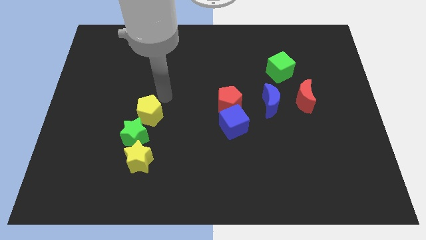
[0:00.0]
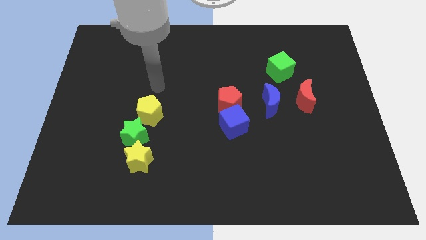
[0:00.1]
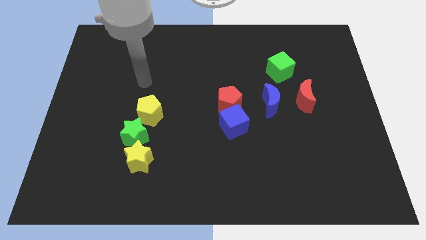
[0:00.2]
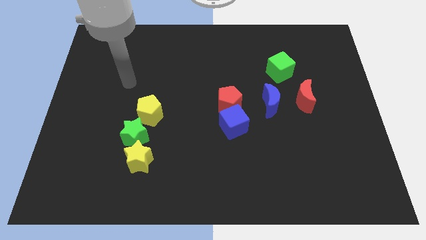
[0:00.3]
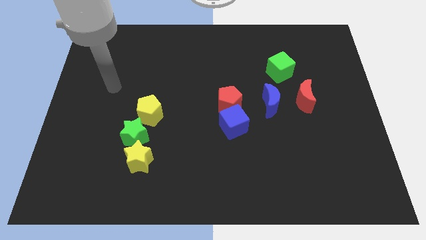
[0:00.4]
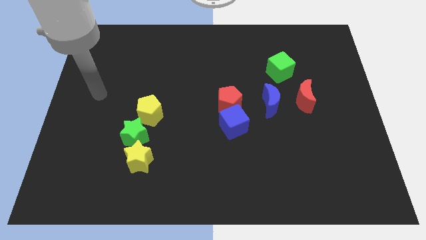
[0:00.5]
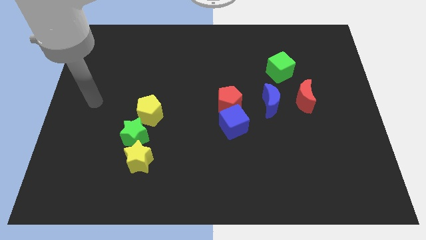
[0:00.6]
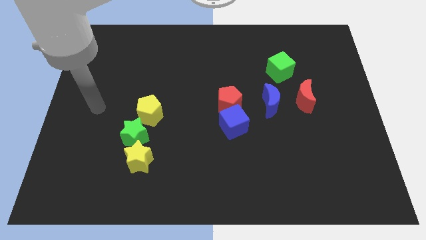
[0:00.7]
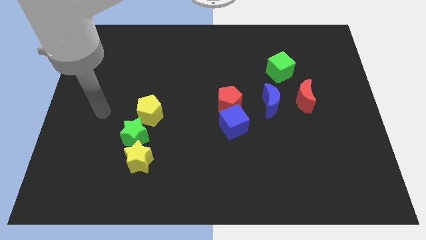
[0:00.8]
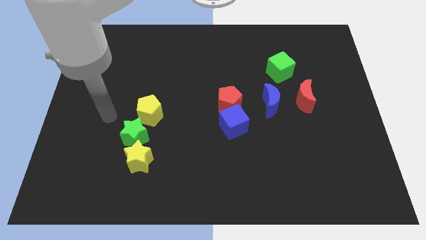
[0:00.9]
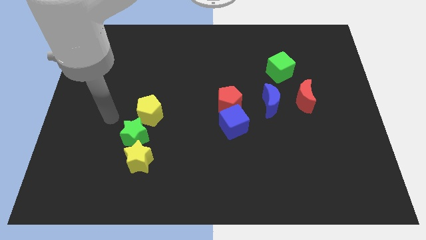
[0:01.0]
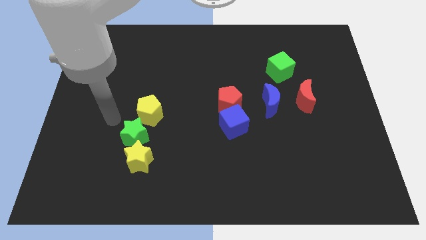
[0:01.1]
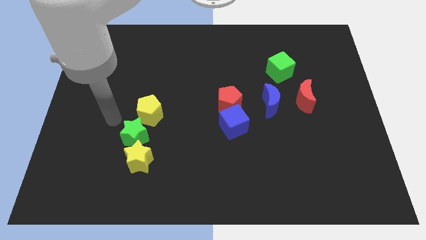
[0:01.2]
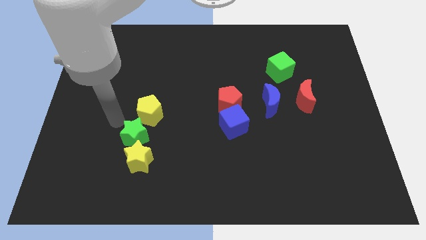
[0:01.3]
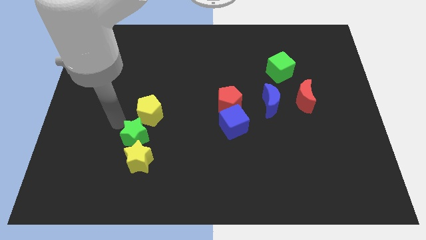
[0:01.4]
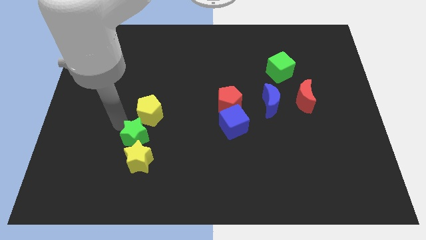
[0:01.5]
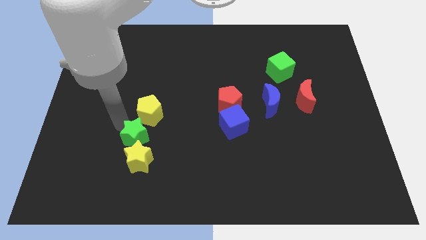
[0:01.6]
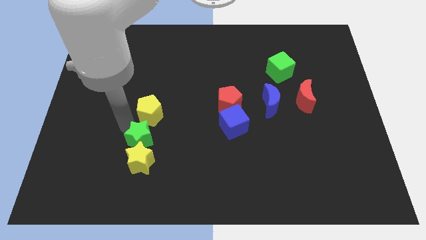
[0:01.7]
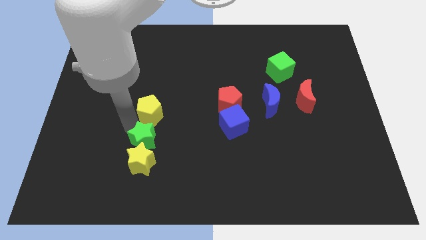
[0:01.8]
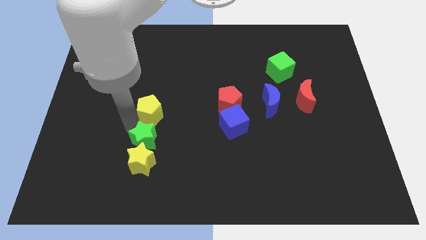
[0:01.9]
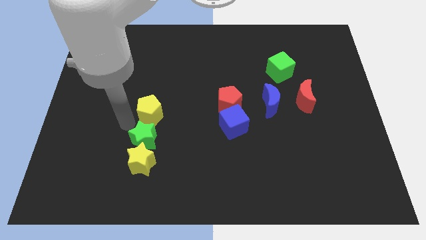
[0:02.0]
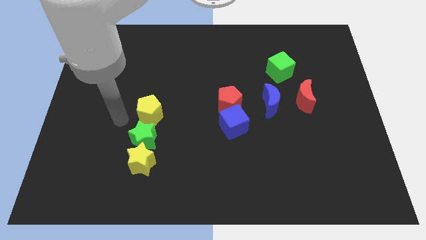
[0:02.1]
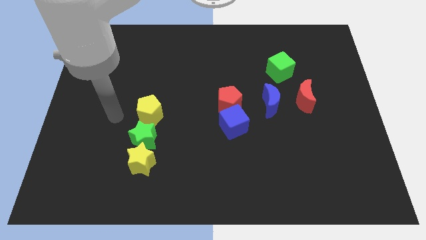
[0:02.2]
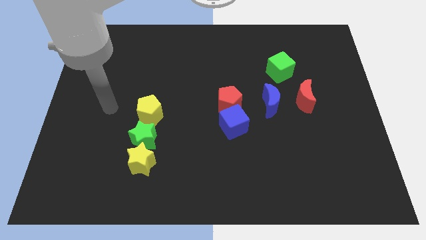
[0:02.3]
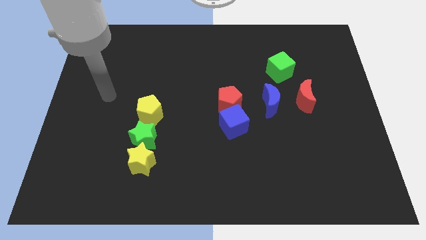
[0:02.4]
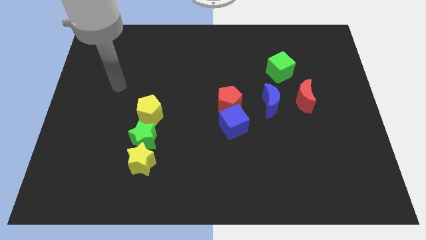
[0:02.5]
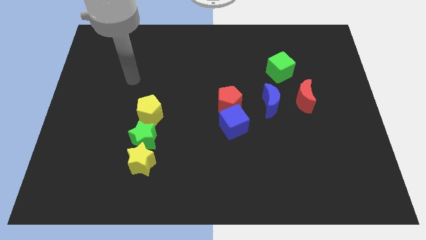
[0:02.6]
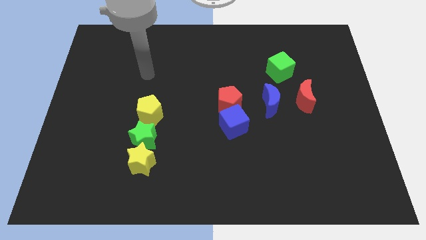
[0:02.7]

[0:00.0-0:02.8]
move slightly green star to the right

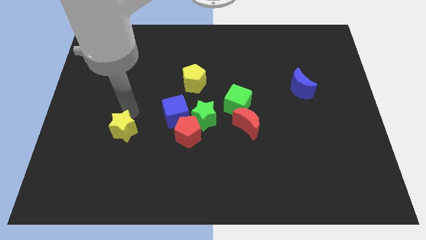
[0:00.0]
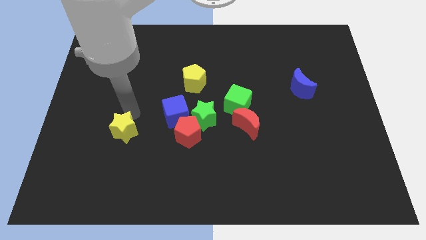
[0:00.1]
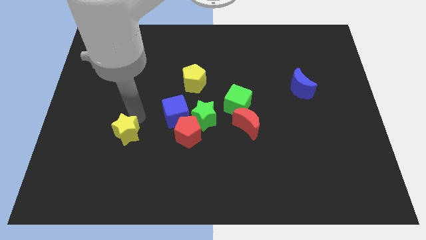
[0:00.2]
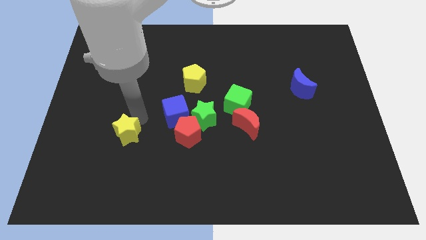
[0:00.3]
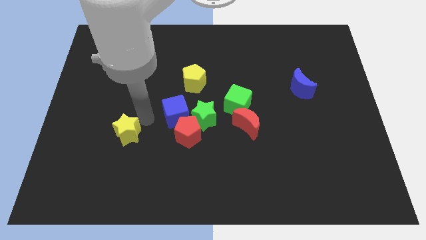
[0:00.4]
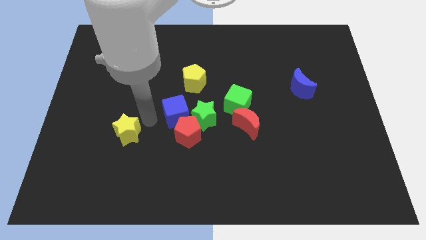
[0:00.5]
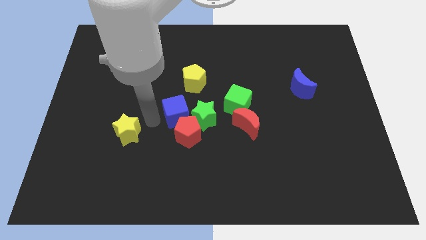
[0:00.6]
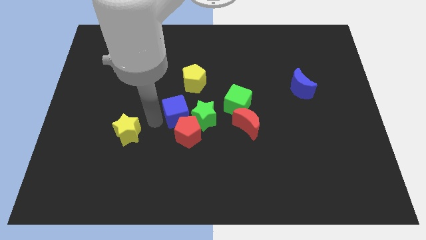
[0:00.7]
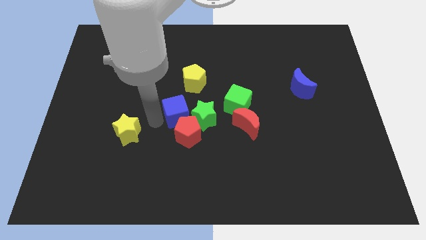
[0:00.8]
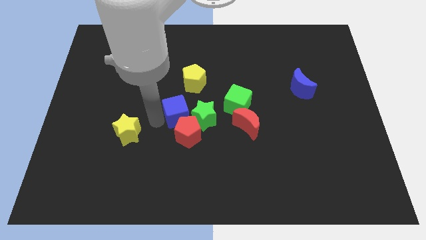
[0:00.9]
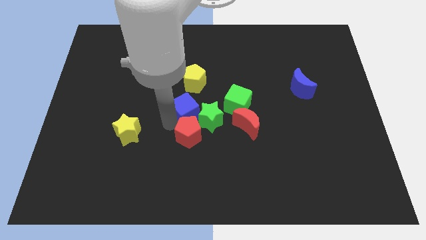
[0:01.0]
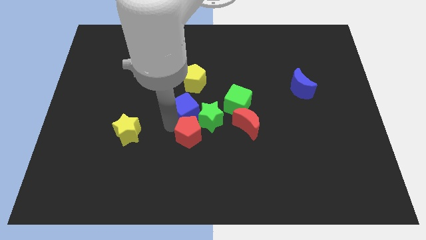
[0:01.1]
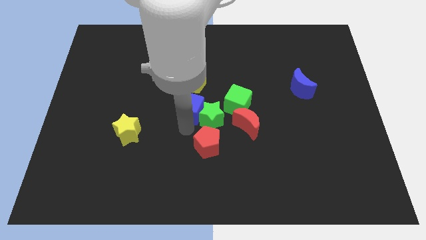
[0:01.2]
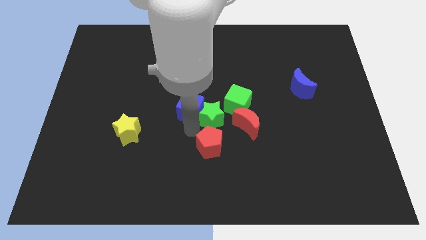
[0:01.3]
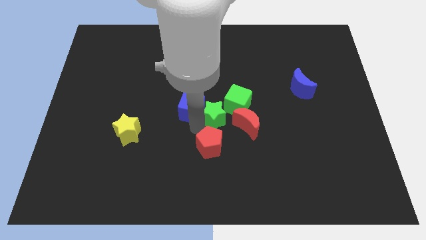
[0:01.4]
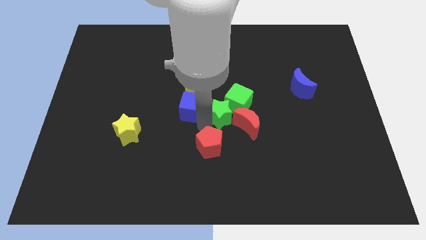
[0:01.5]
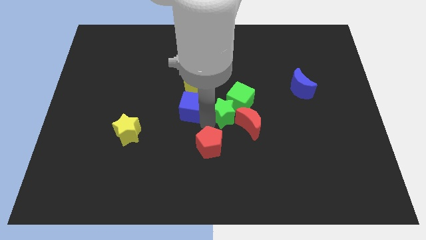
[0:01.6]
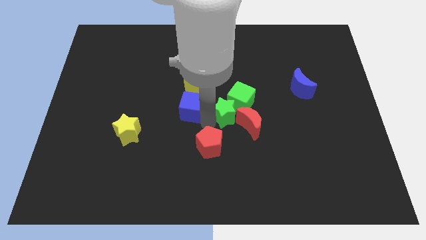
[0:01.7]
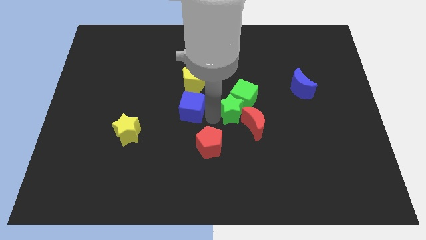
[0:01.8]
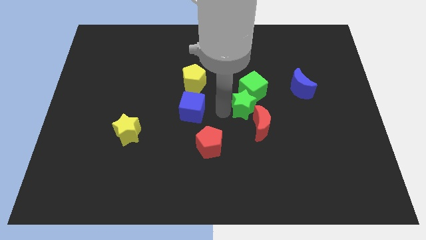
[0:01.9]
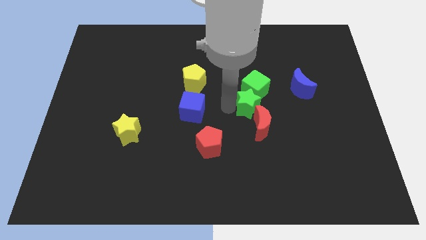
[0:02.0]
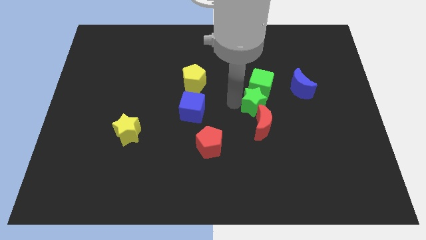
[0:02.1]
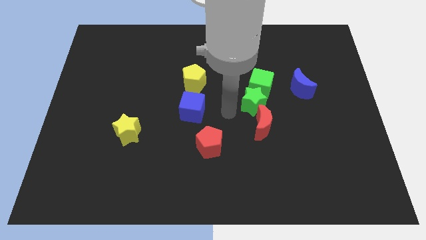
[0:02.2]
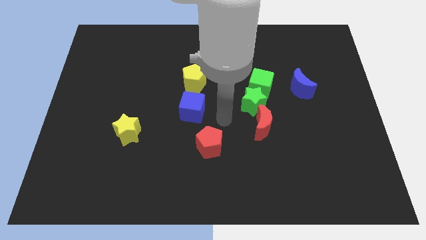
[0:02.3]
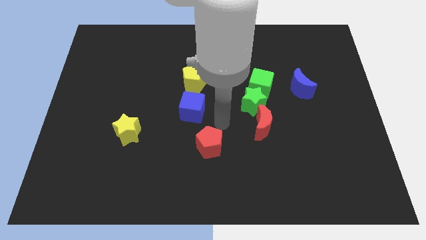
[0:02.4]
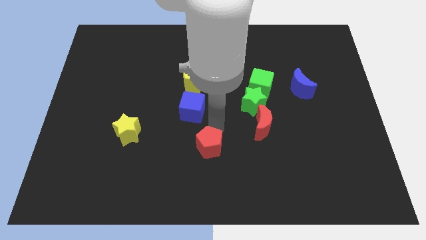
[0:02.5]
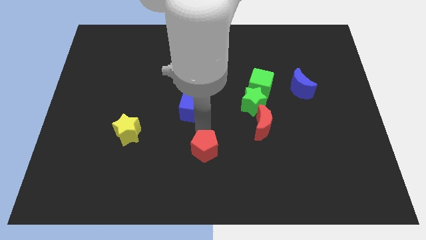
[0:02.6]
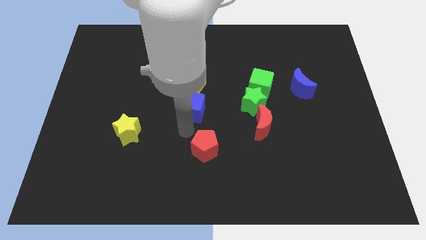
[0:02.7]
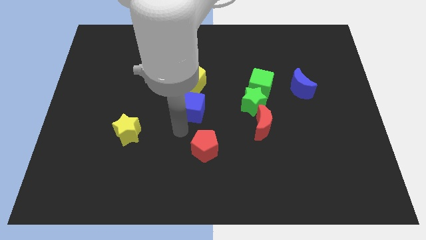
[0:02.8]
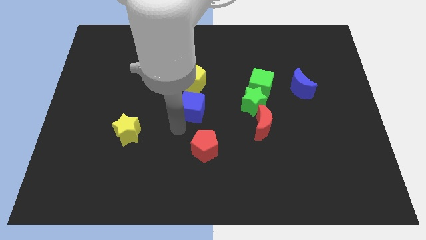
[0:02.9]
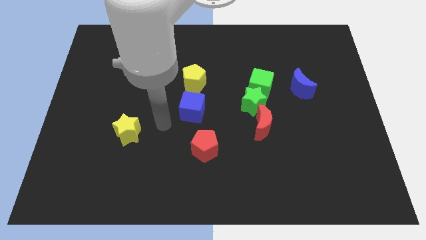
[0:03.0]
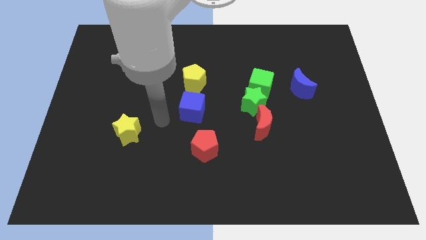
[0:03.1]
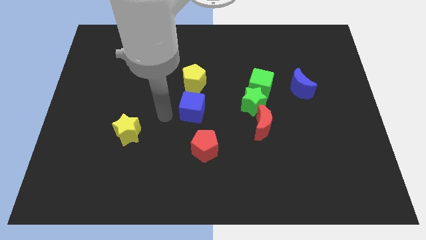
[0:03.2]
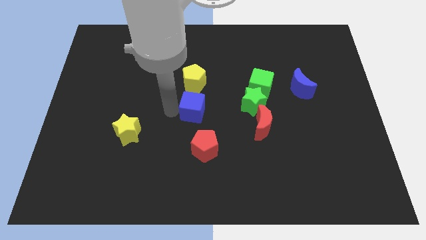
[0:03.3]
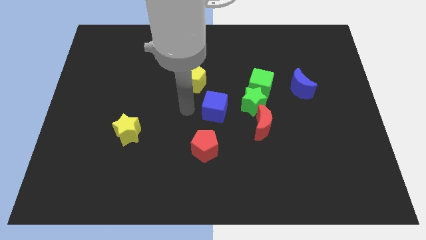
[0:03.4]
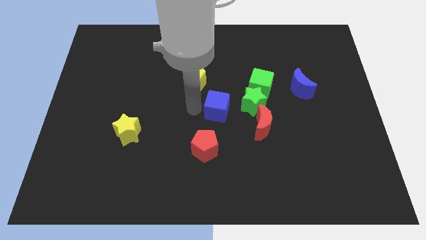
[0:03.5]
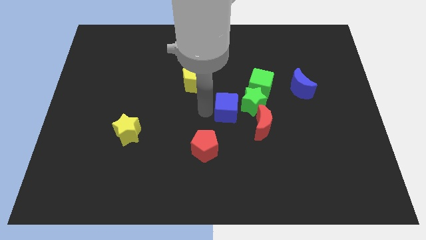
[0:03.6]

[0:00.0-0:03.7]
push a group of blocks to the center

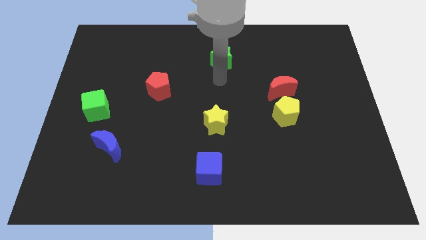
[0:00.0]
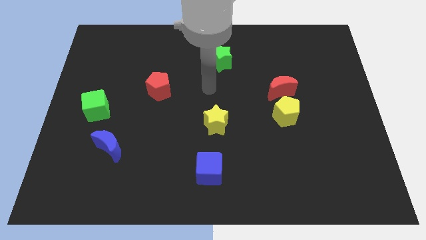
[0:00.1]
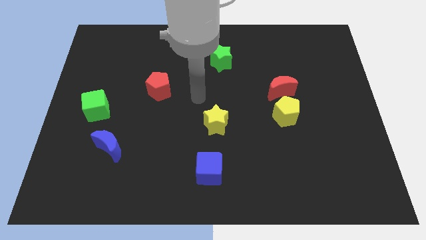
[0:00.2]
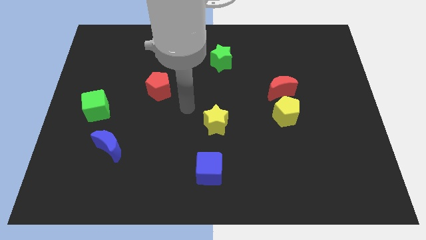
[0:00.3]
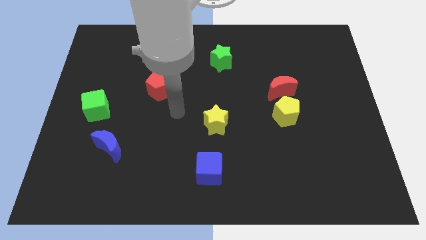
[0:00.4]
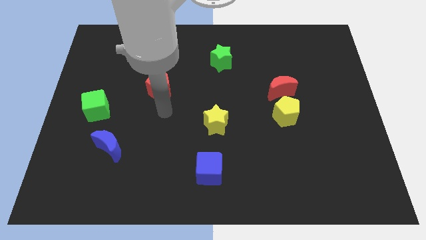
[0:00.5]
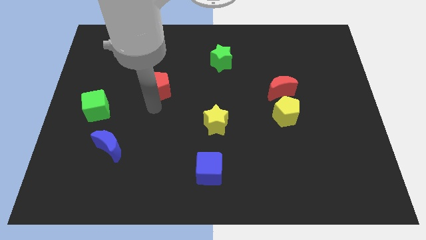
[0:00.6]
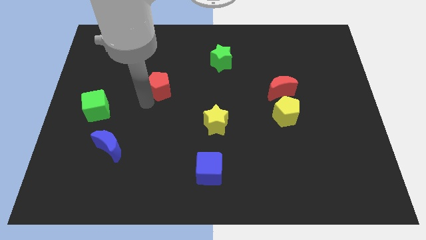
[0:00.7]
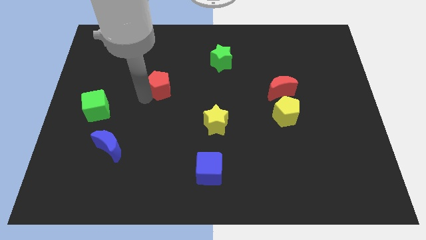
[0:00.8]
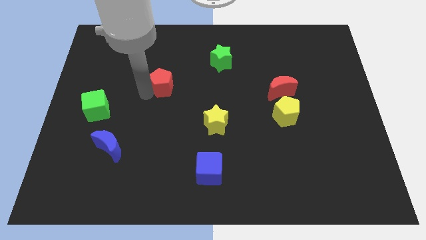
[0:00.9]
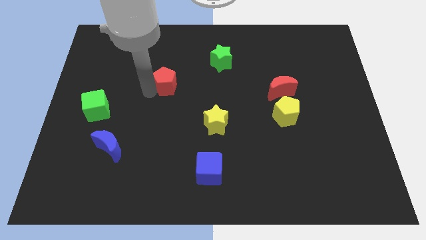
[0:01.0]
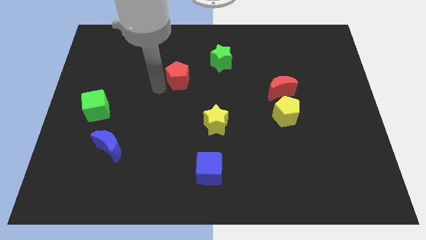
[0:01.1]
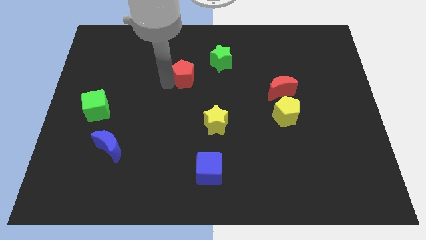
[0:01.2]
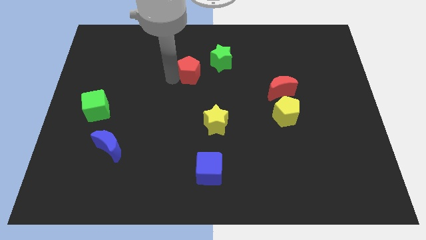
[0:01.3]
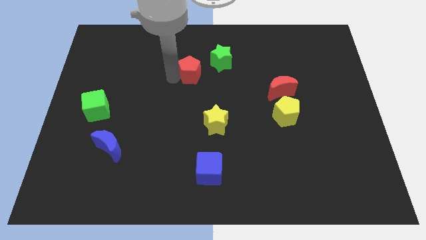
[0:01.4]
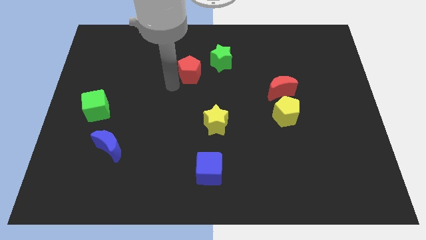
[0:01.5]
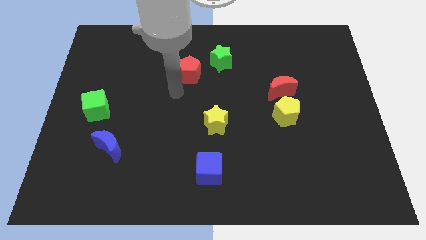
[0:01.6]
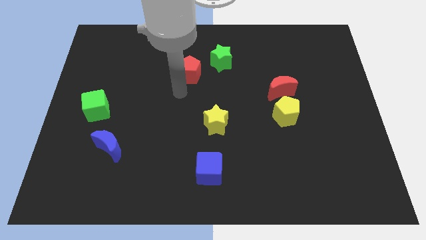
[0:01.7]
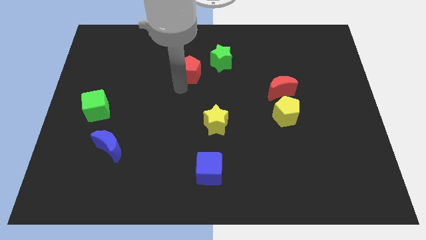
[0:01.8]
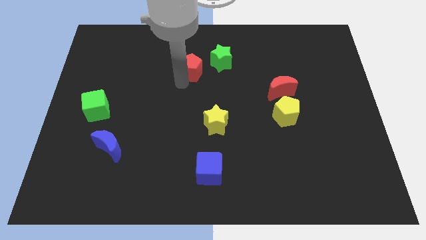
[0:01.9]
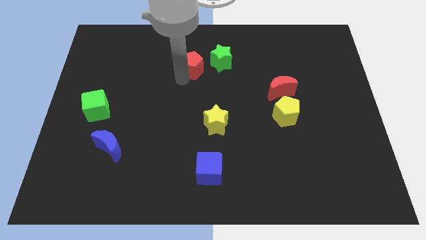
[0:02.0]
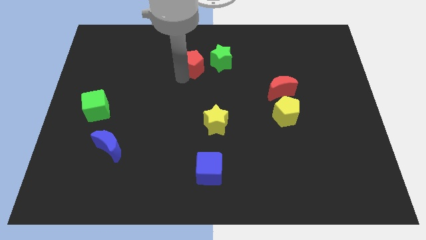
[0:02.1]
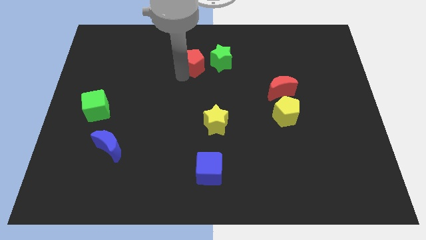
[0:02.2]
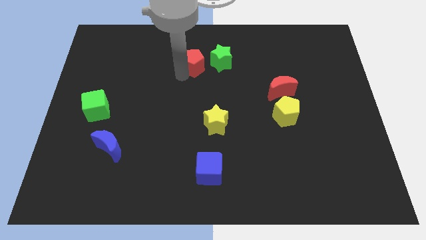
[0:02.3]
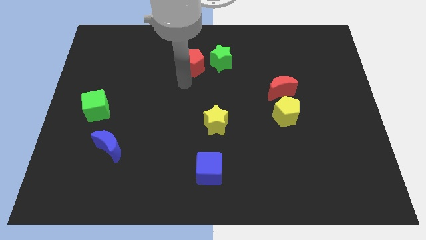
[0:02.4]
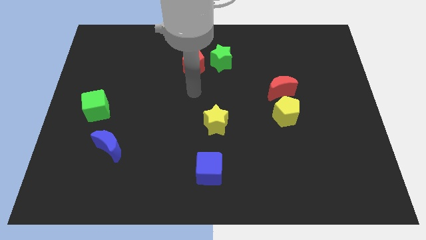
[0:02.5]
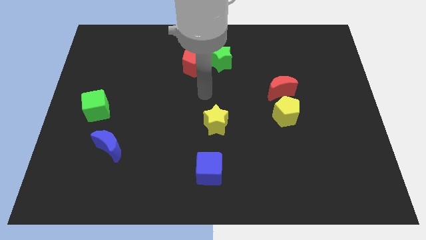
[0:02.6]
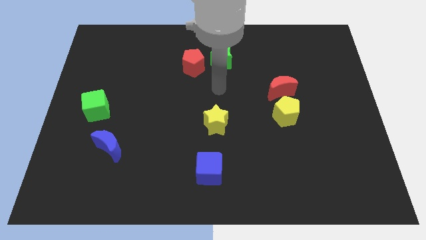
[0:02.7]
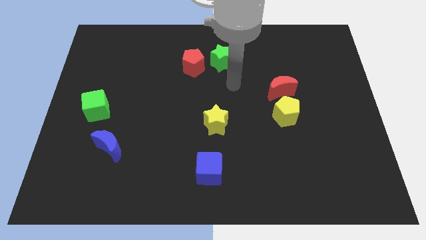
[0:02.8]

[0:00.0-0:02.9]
place the red pentagon to the left of the green star
